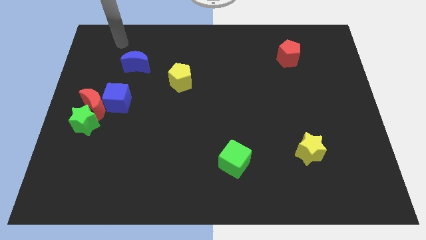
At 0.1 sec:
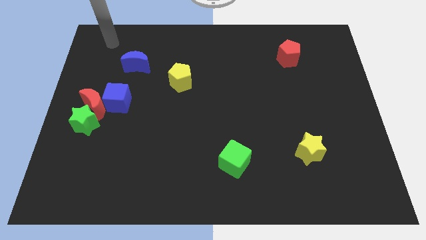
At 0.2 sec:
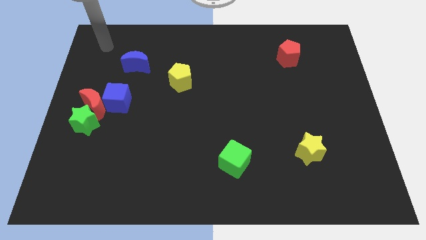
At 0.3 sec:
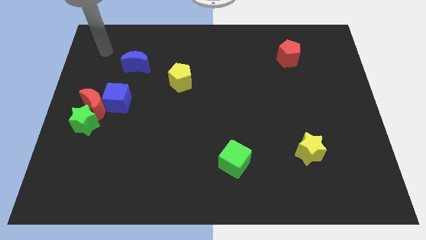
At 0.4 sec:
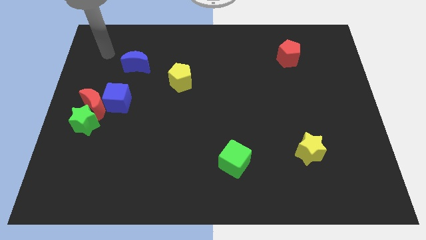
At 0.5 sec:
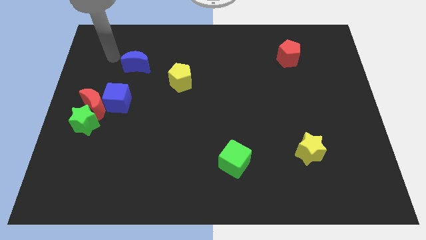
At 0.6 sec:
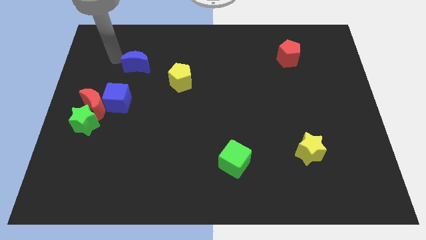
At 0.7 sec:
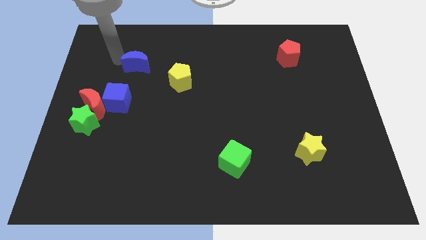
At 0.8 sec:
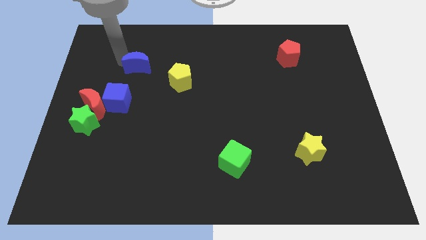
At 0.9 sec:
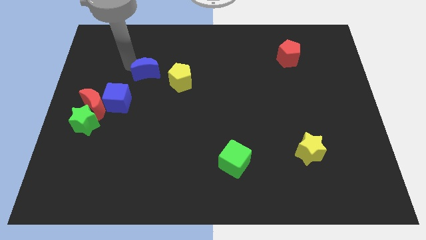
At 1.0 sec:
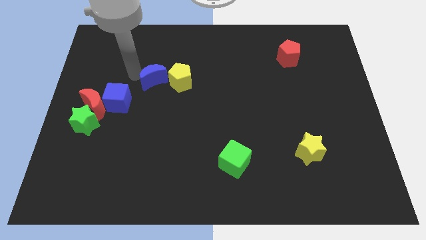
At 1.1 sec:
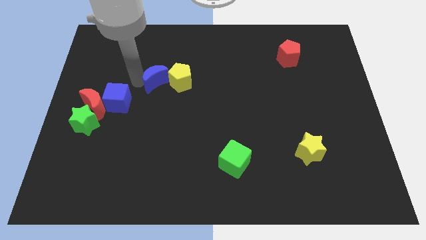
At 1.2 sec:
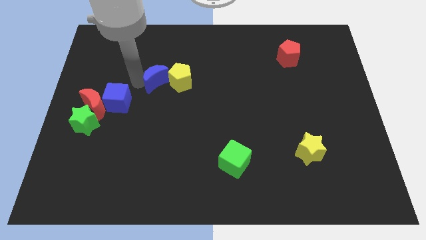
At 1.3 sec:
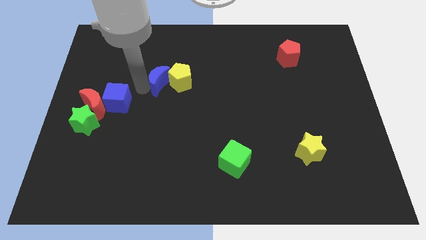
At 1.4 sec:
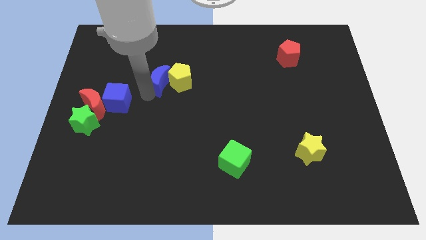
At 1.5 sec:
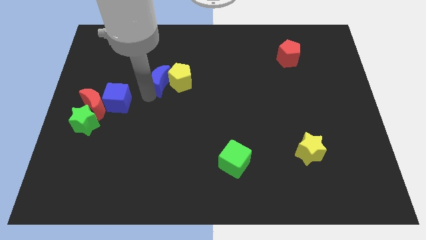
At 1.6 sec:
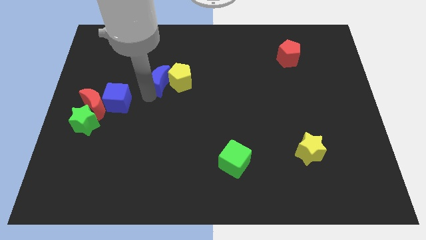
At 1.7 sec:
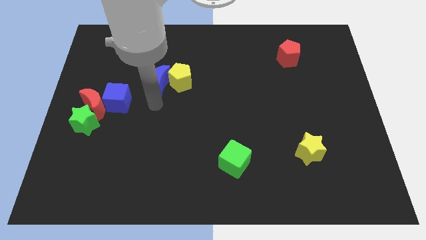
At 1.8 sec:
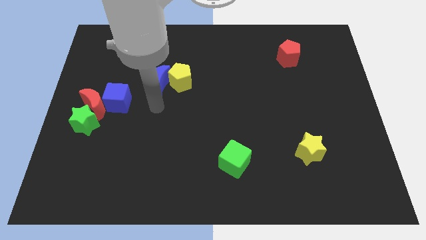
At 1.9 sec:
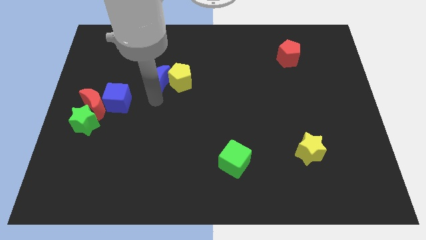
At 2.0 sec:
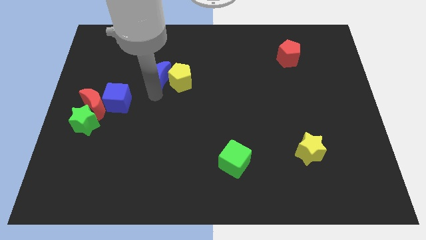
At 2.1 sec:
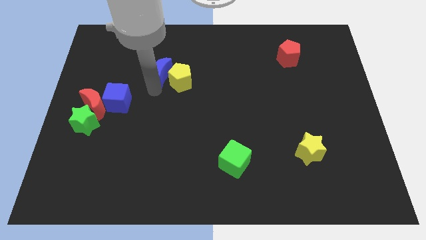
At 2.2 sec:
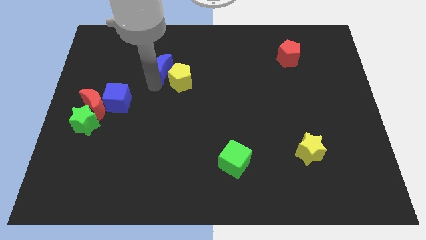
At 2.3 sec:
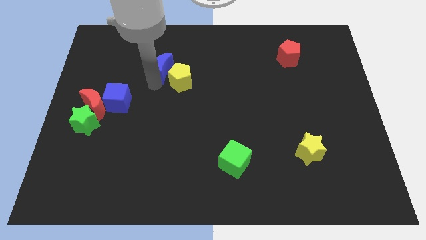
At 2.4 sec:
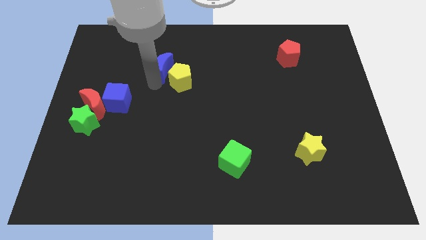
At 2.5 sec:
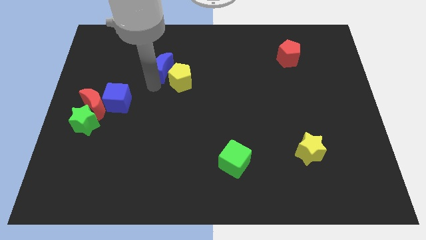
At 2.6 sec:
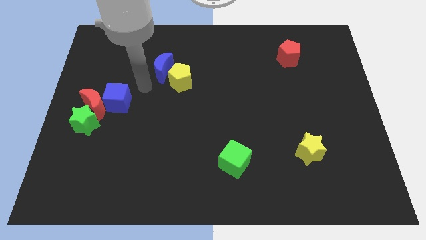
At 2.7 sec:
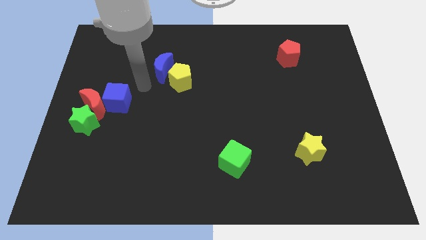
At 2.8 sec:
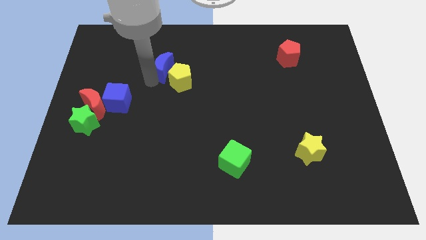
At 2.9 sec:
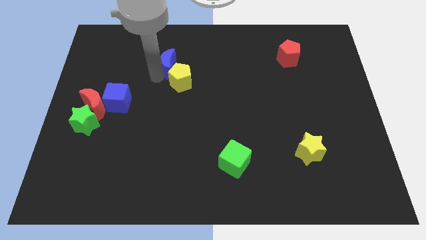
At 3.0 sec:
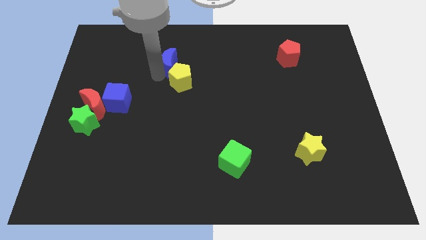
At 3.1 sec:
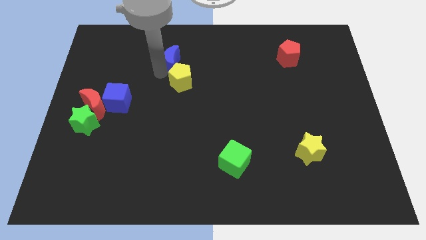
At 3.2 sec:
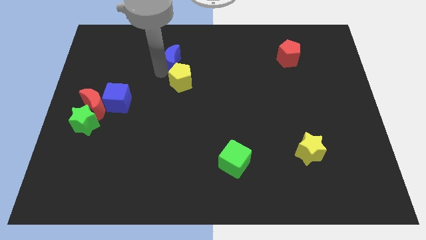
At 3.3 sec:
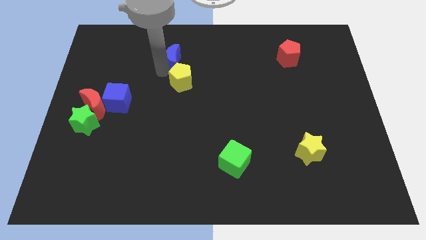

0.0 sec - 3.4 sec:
push the blue crescent on top of the yellow pentagon

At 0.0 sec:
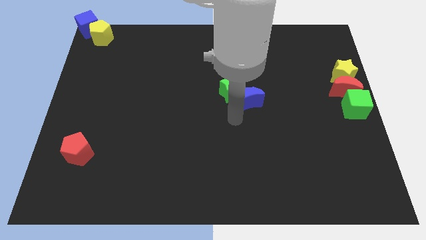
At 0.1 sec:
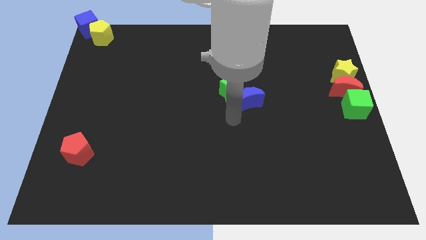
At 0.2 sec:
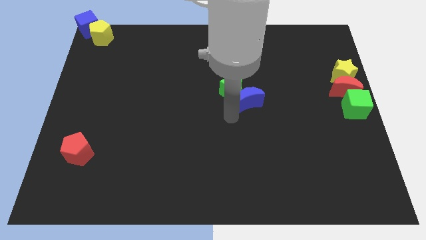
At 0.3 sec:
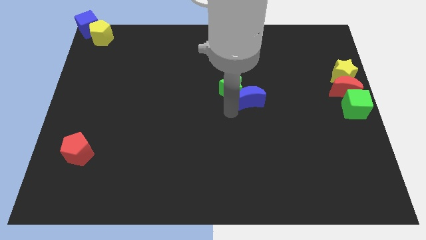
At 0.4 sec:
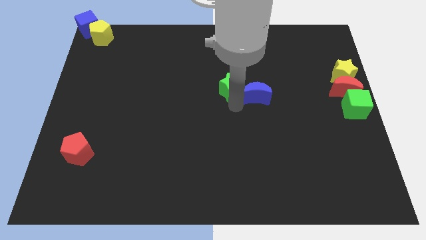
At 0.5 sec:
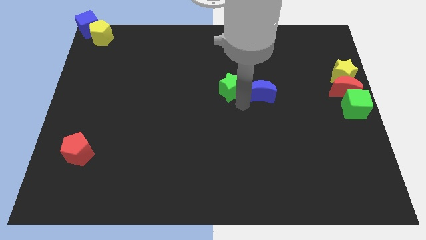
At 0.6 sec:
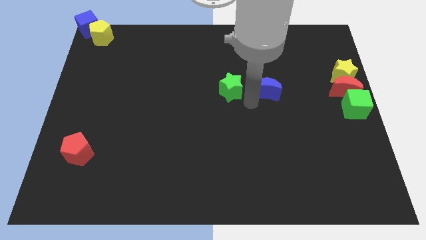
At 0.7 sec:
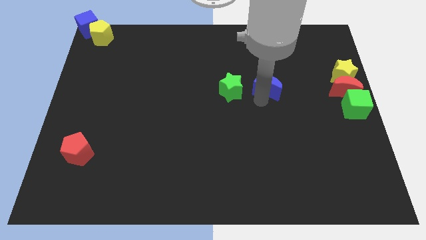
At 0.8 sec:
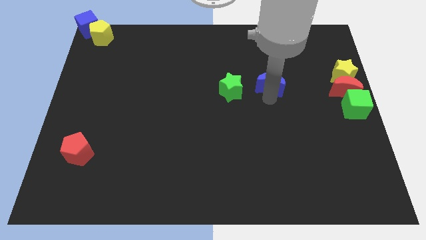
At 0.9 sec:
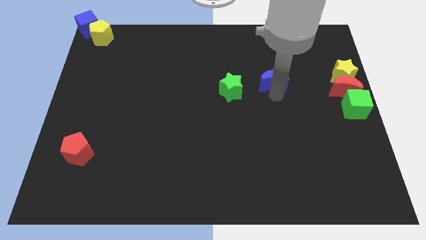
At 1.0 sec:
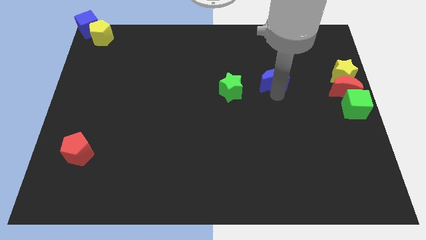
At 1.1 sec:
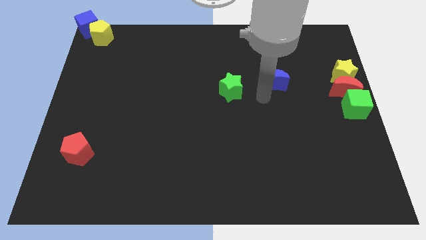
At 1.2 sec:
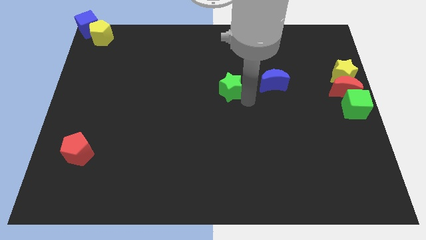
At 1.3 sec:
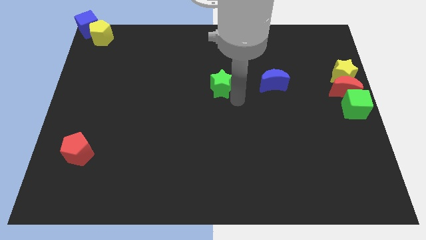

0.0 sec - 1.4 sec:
place the blue crescent to the right side of the green star

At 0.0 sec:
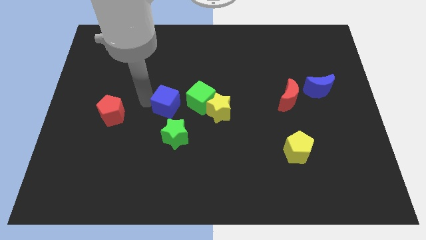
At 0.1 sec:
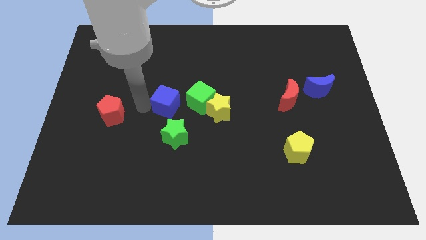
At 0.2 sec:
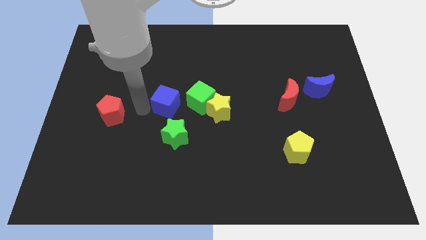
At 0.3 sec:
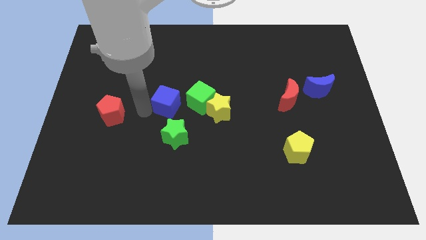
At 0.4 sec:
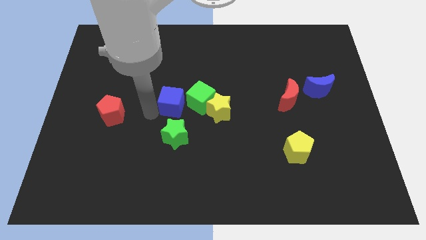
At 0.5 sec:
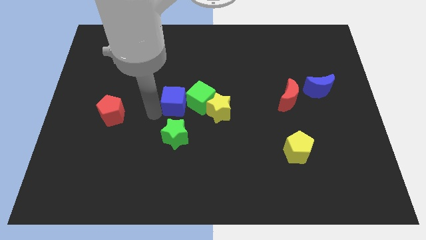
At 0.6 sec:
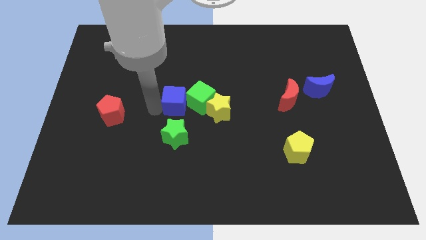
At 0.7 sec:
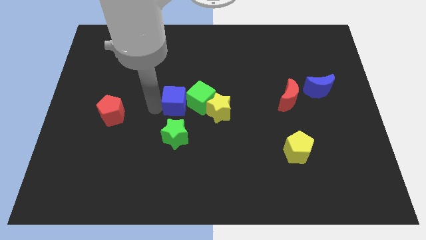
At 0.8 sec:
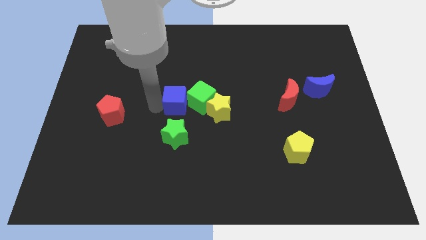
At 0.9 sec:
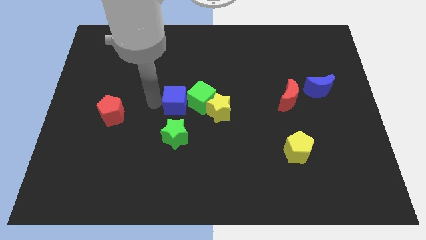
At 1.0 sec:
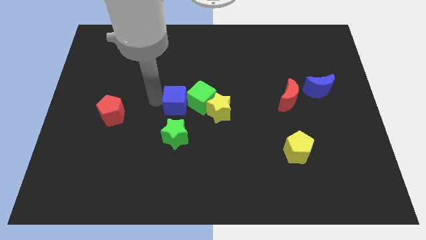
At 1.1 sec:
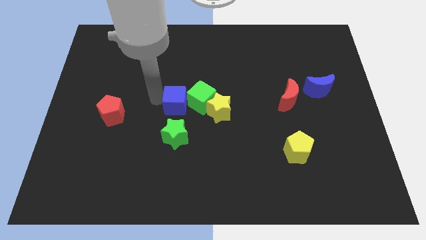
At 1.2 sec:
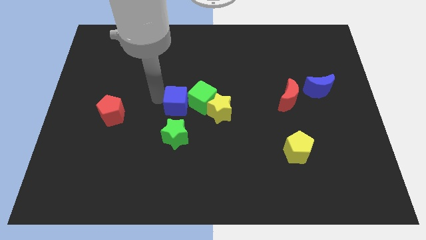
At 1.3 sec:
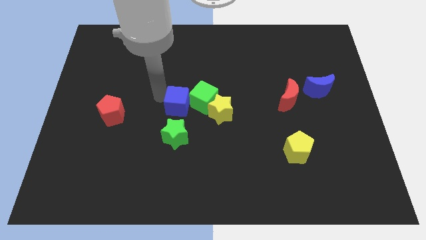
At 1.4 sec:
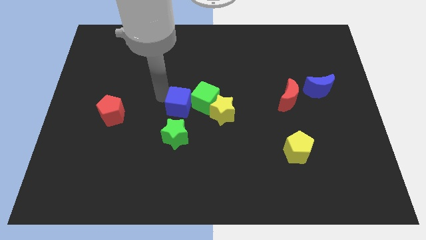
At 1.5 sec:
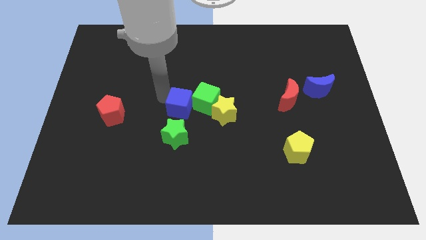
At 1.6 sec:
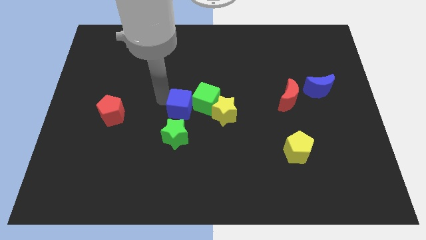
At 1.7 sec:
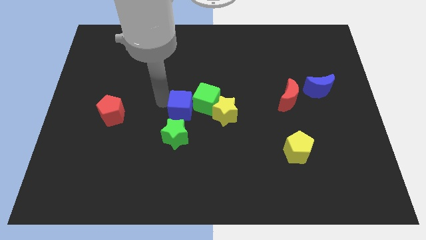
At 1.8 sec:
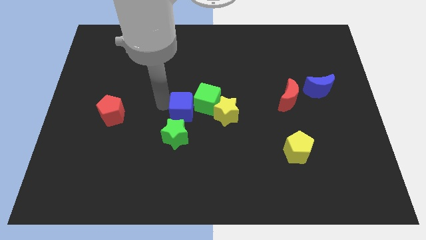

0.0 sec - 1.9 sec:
move blue cube into the green cube

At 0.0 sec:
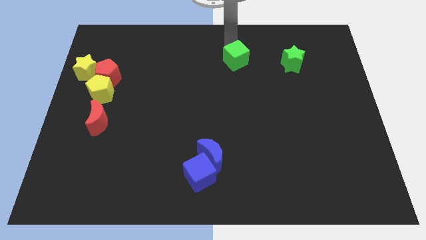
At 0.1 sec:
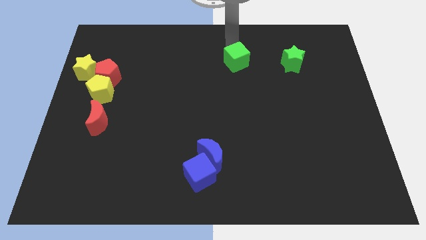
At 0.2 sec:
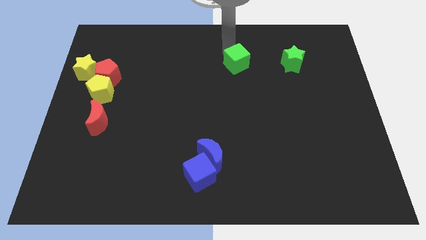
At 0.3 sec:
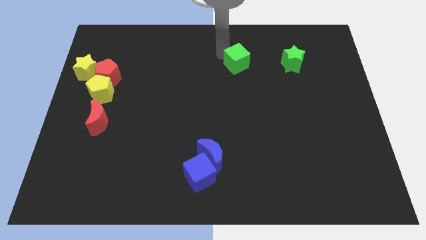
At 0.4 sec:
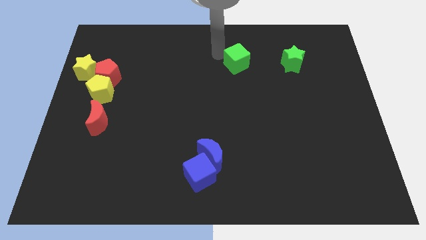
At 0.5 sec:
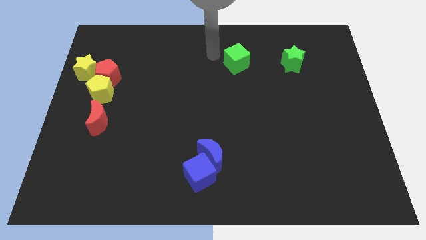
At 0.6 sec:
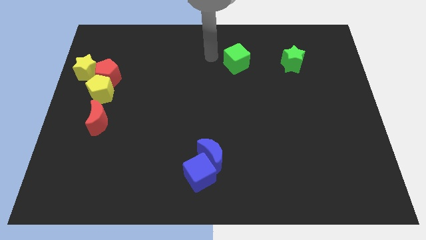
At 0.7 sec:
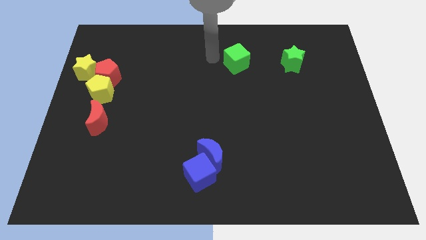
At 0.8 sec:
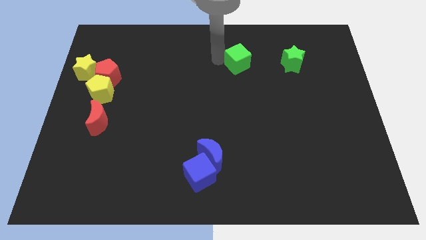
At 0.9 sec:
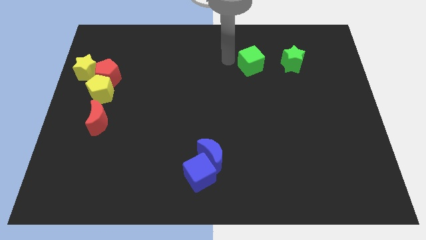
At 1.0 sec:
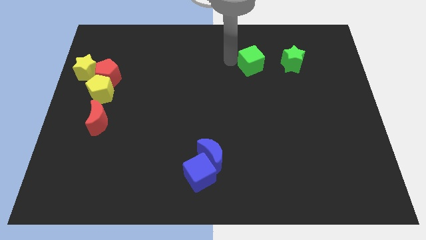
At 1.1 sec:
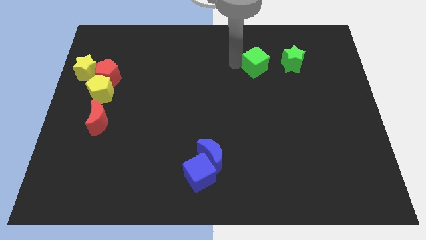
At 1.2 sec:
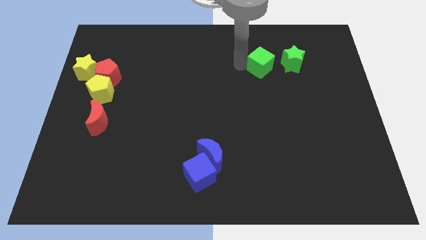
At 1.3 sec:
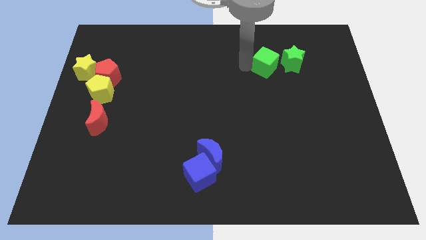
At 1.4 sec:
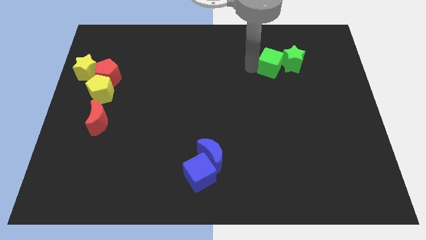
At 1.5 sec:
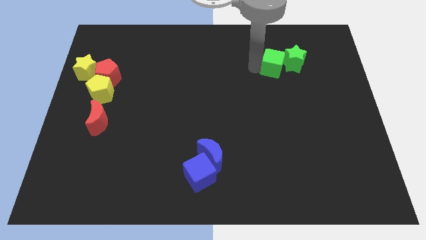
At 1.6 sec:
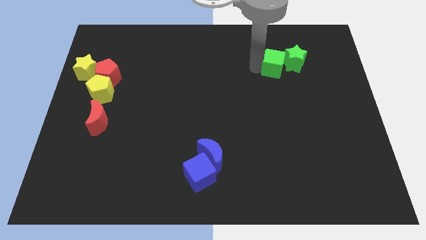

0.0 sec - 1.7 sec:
place the green square left to the green star

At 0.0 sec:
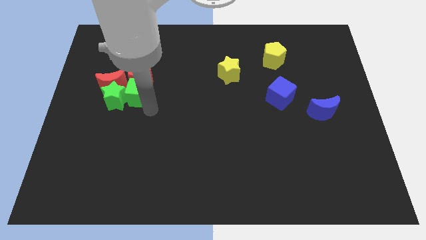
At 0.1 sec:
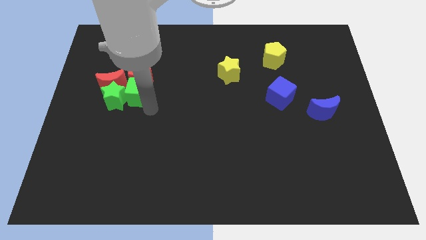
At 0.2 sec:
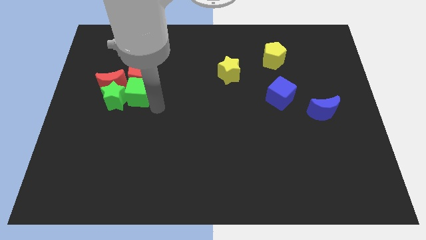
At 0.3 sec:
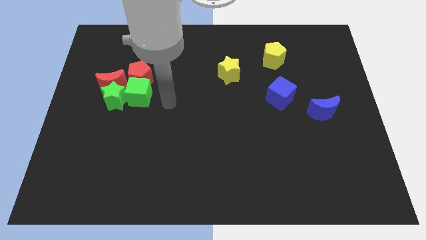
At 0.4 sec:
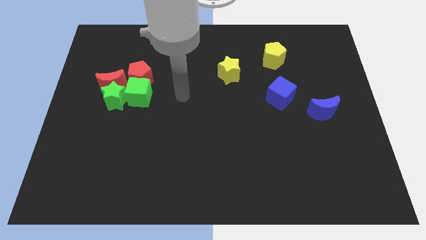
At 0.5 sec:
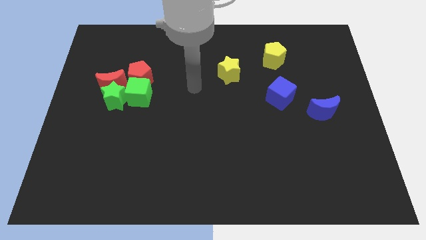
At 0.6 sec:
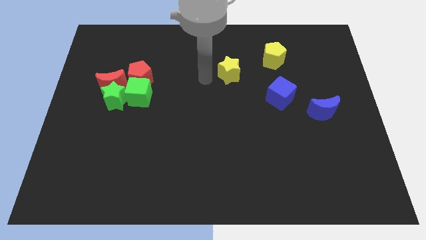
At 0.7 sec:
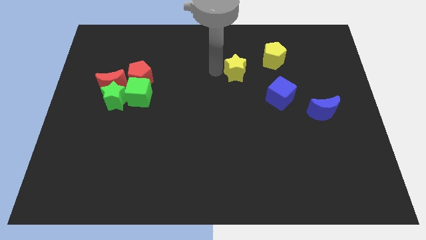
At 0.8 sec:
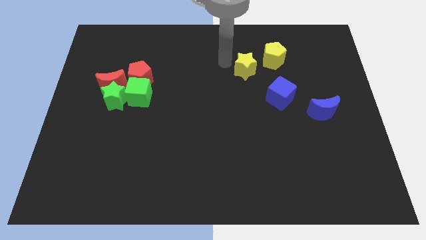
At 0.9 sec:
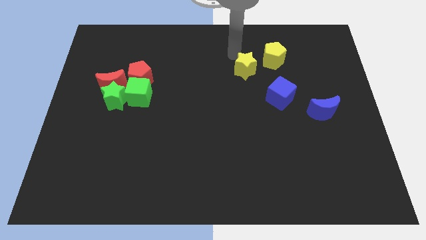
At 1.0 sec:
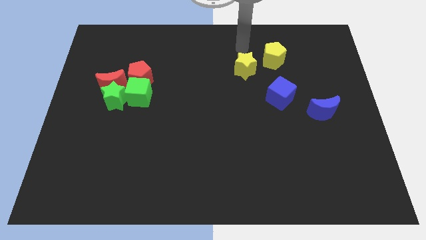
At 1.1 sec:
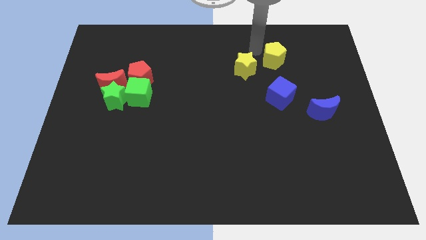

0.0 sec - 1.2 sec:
push your arm towards the yellow pentagon
